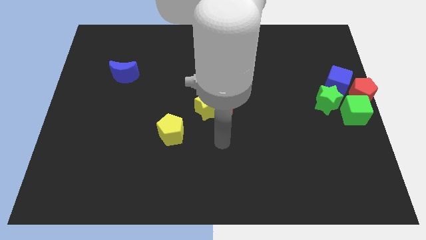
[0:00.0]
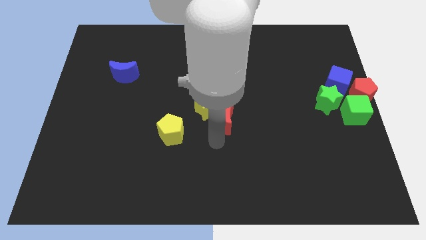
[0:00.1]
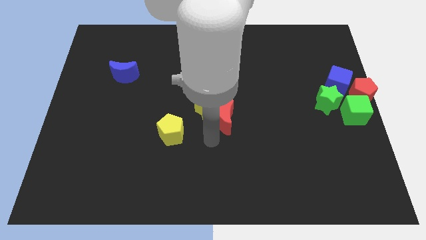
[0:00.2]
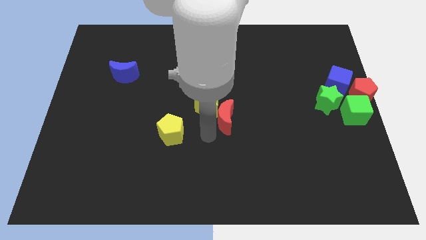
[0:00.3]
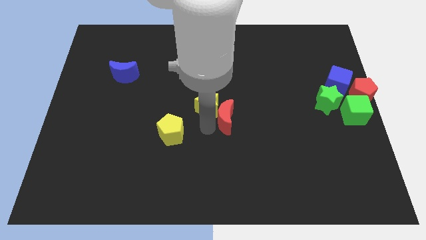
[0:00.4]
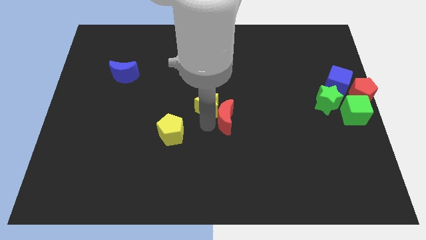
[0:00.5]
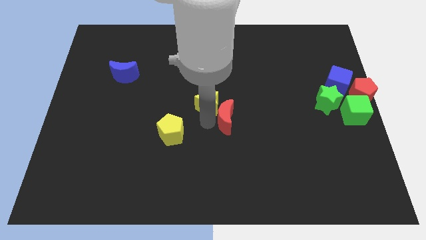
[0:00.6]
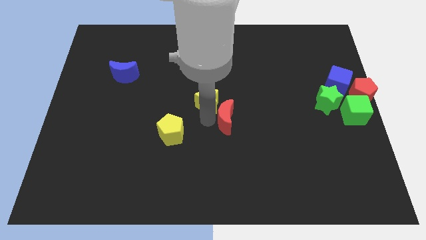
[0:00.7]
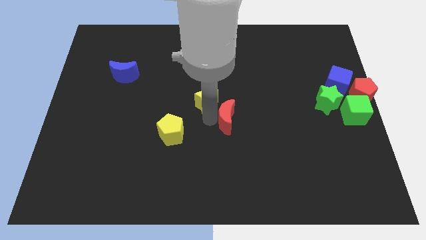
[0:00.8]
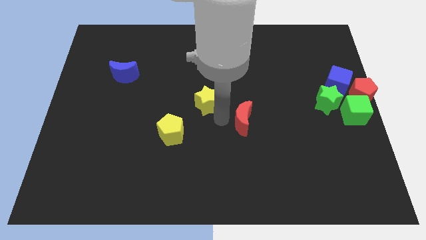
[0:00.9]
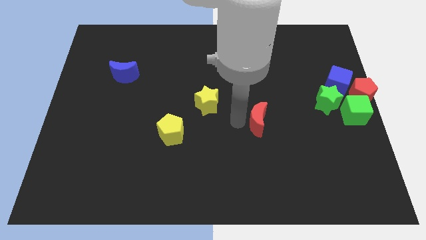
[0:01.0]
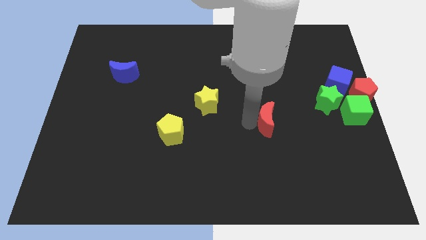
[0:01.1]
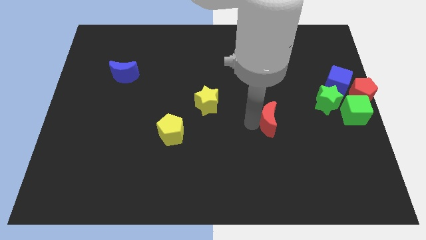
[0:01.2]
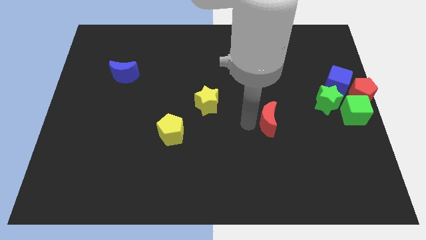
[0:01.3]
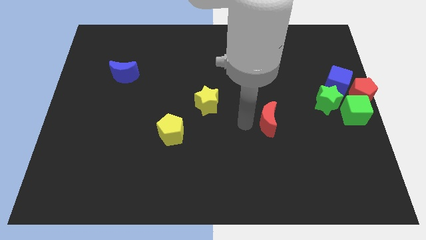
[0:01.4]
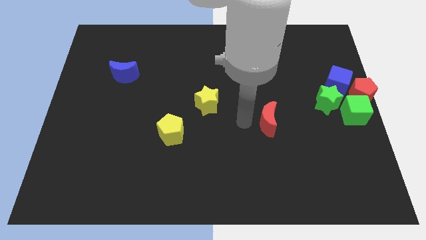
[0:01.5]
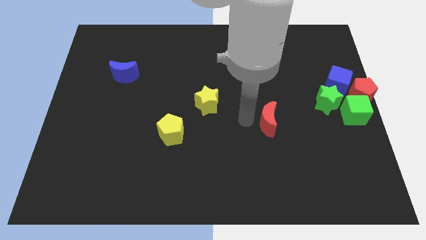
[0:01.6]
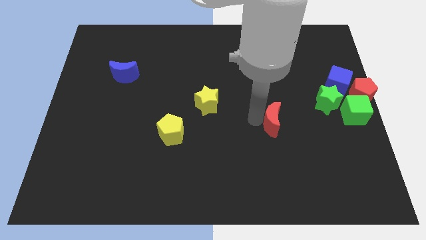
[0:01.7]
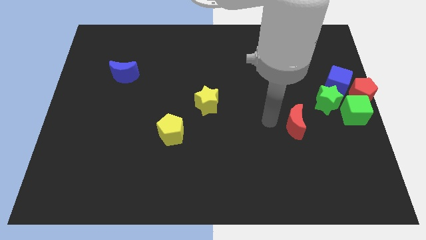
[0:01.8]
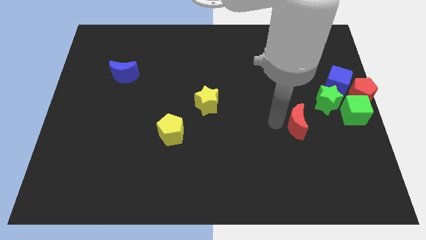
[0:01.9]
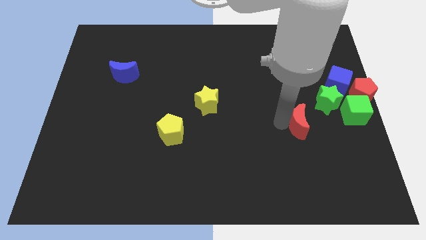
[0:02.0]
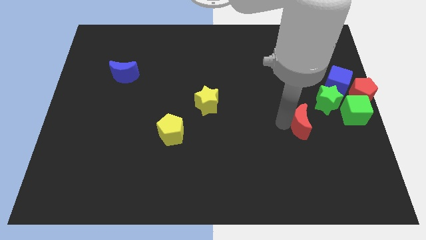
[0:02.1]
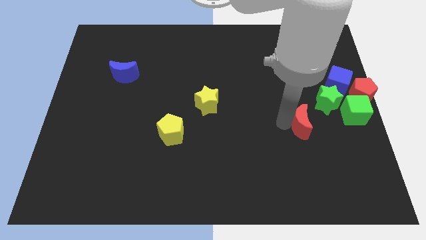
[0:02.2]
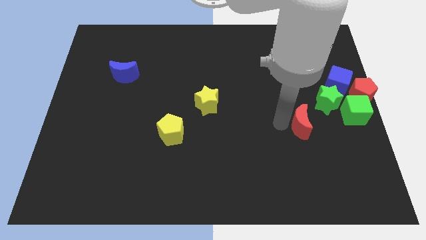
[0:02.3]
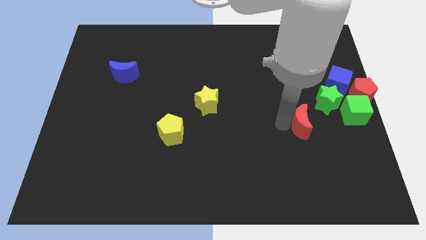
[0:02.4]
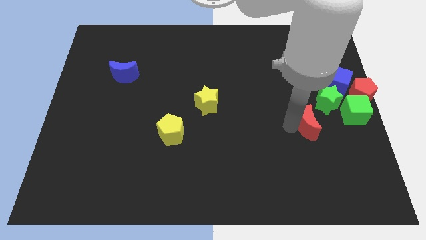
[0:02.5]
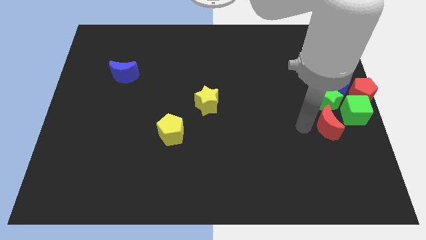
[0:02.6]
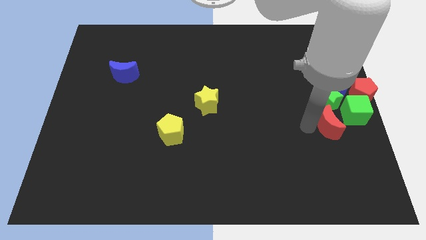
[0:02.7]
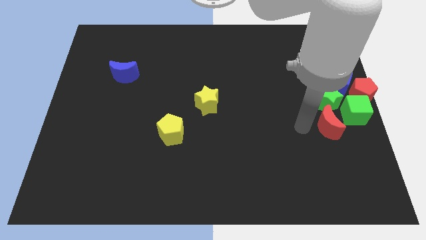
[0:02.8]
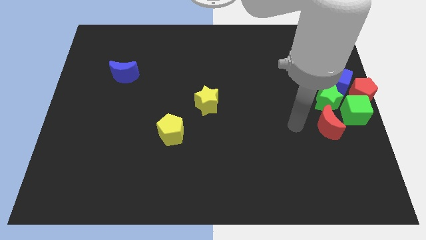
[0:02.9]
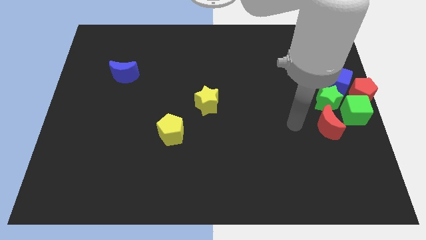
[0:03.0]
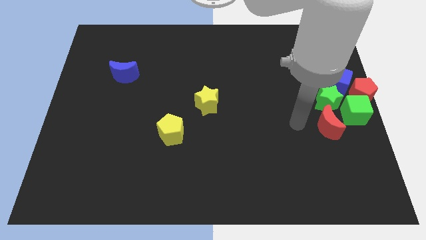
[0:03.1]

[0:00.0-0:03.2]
place the red moon below the green blocks

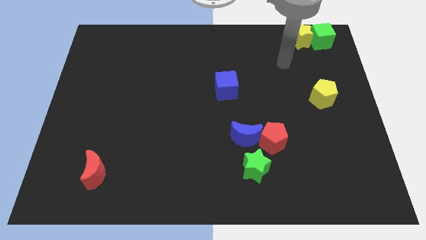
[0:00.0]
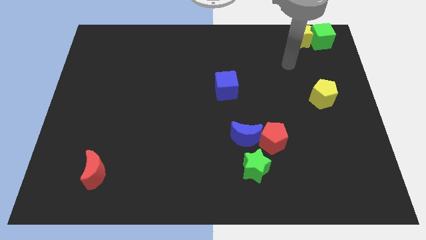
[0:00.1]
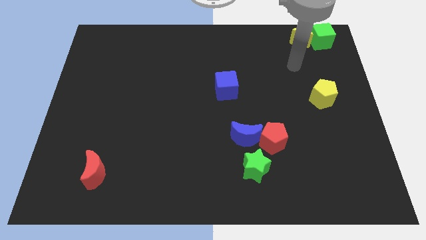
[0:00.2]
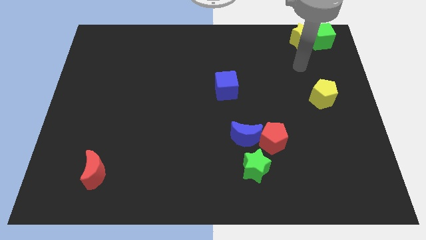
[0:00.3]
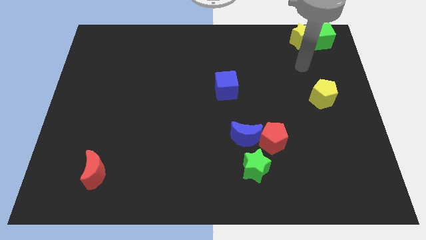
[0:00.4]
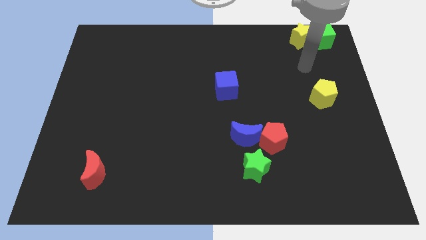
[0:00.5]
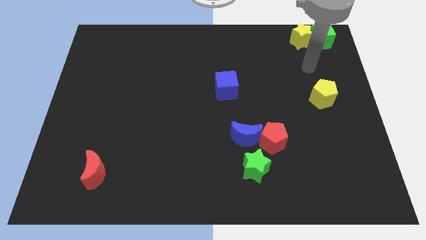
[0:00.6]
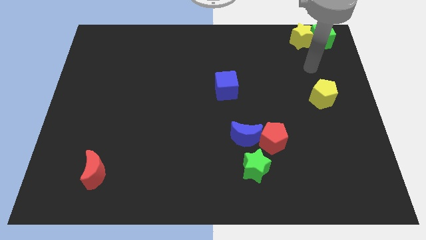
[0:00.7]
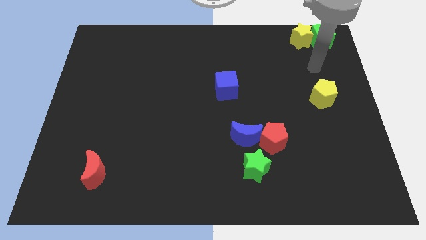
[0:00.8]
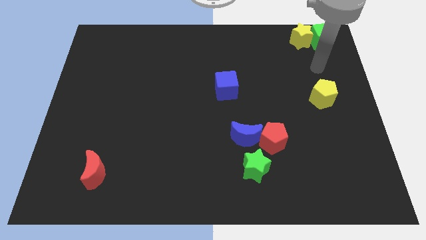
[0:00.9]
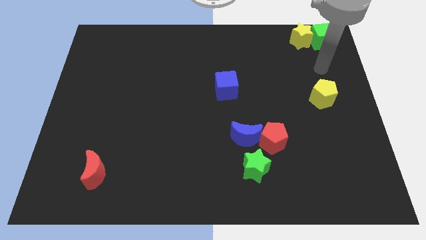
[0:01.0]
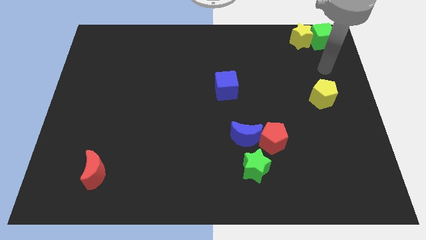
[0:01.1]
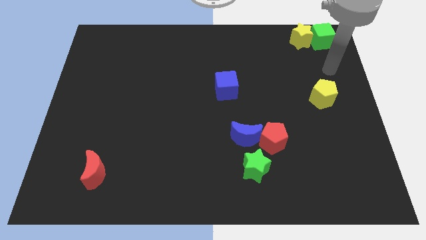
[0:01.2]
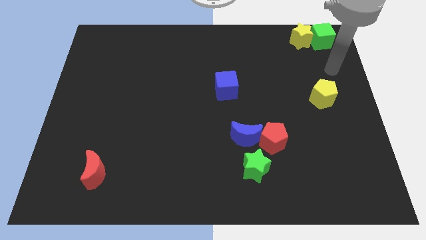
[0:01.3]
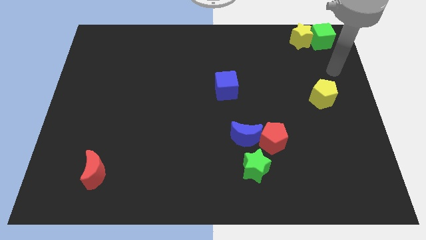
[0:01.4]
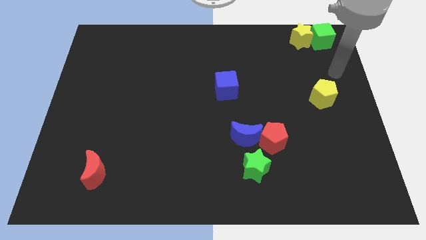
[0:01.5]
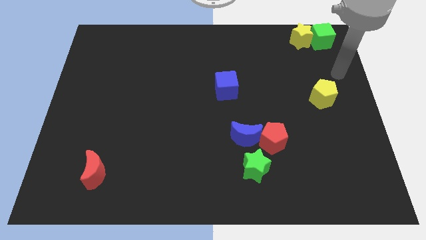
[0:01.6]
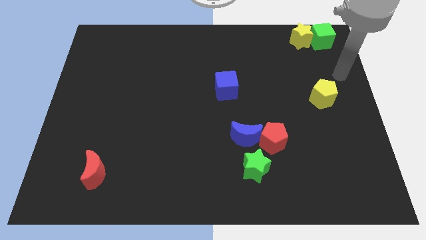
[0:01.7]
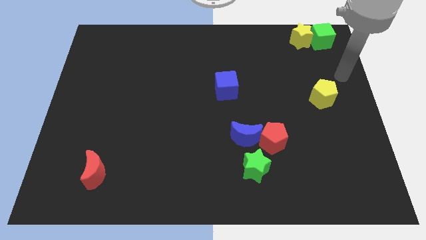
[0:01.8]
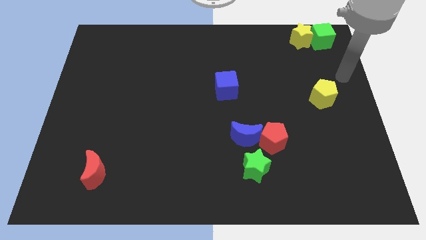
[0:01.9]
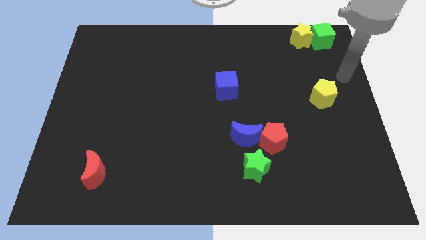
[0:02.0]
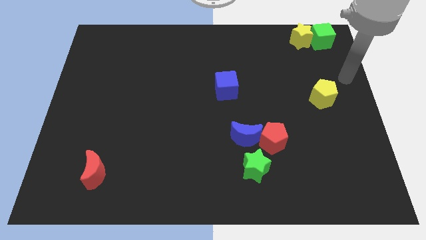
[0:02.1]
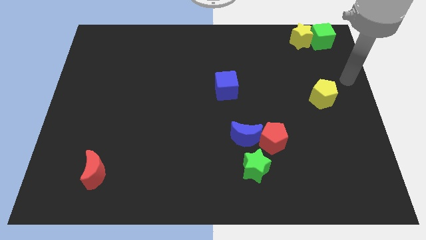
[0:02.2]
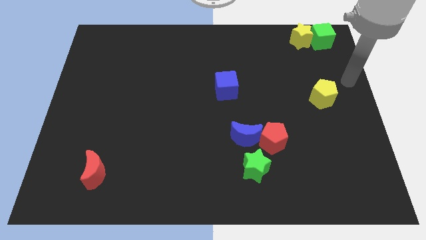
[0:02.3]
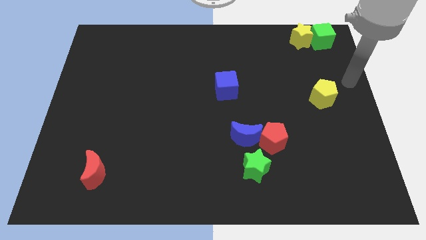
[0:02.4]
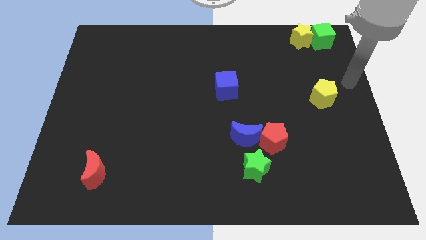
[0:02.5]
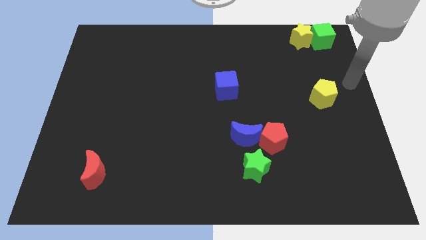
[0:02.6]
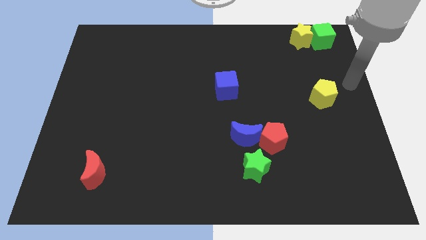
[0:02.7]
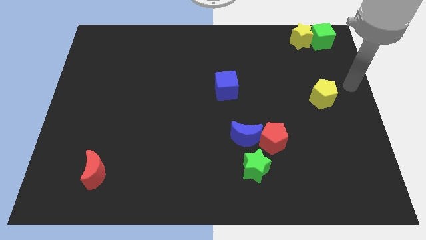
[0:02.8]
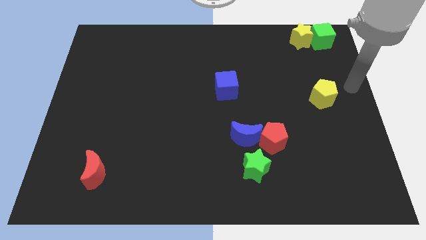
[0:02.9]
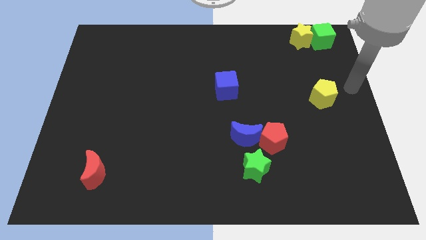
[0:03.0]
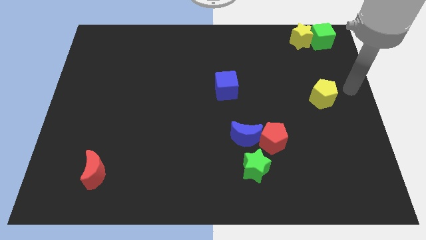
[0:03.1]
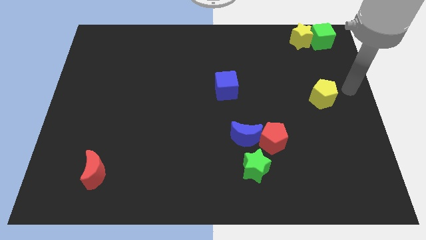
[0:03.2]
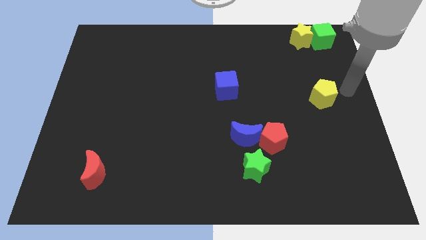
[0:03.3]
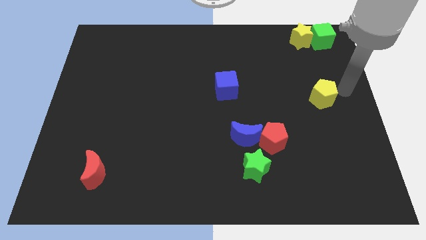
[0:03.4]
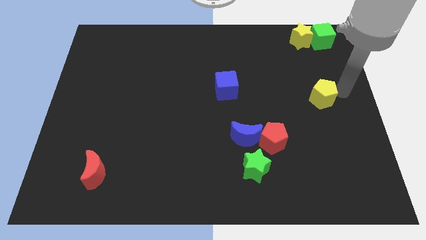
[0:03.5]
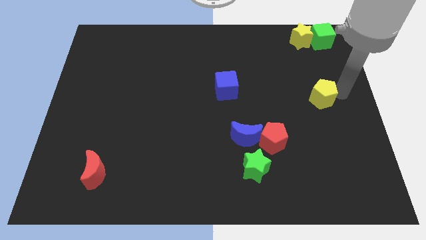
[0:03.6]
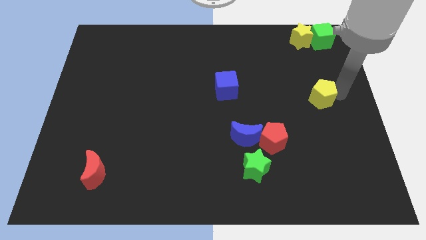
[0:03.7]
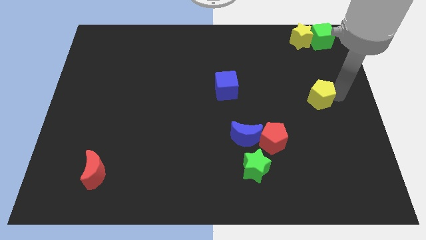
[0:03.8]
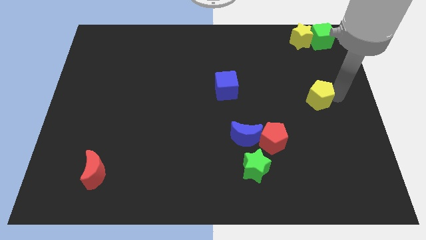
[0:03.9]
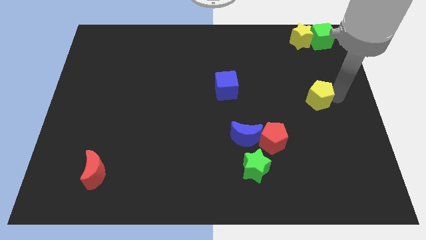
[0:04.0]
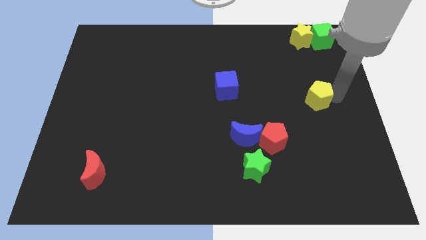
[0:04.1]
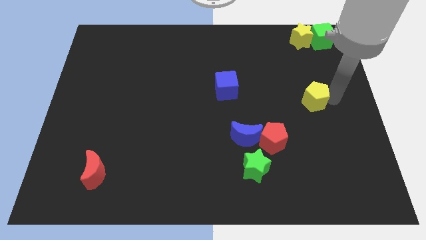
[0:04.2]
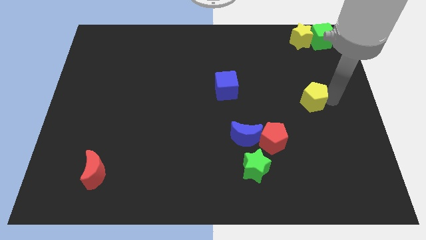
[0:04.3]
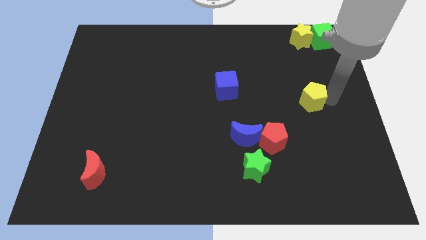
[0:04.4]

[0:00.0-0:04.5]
push yellow pentagon

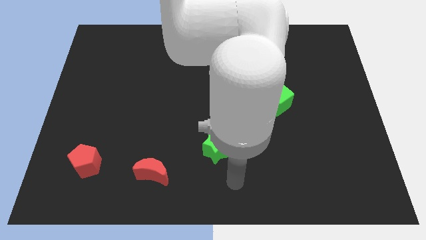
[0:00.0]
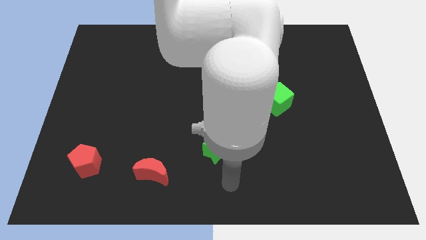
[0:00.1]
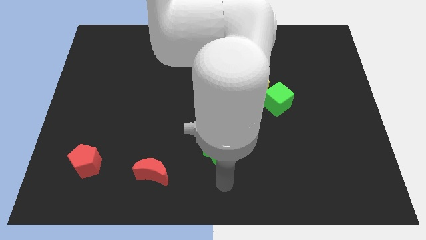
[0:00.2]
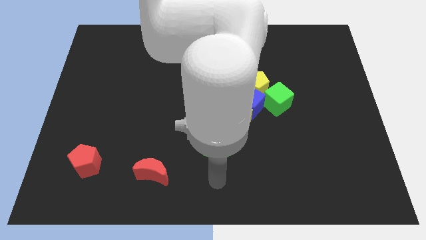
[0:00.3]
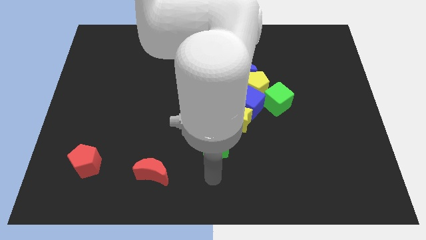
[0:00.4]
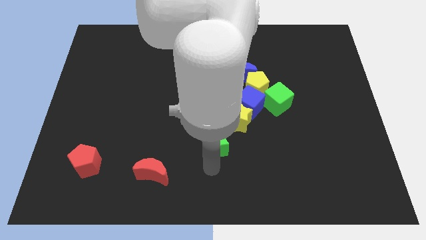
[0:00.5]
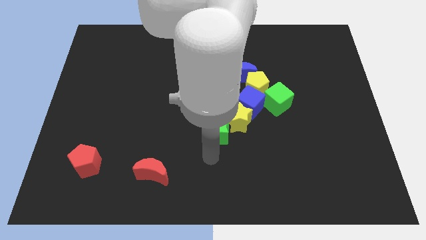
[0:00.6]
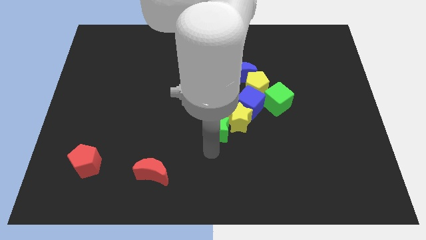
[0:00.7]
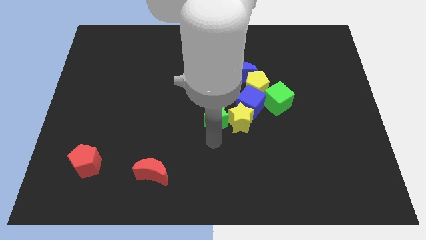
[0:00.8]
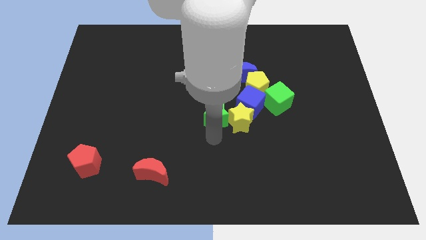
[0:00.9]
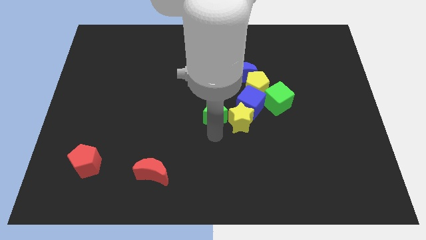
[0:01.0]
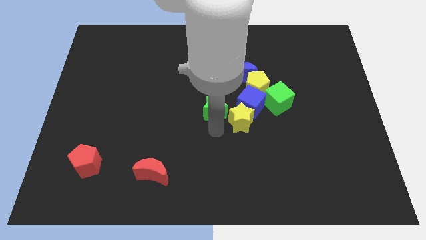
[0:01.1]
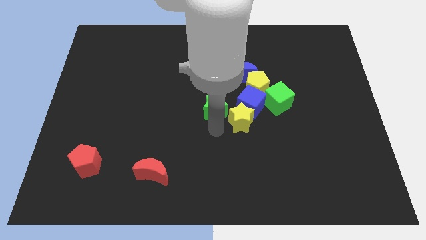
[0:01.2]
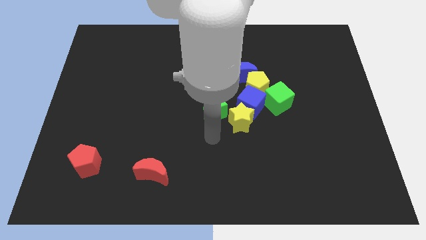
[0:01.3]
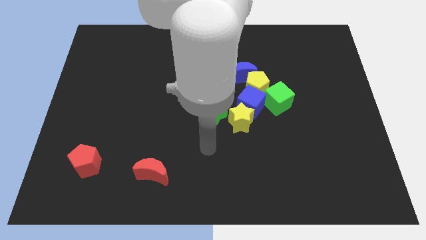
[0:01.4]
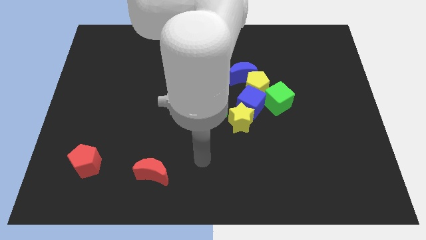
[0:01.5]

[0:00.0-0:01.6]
push the green star towards the top
